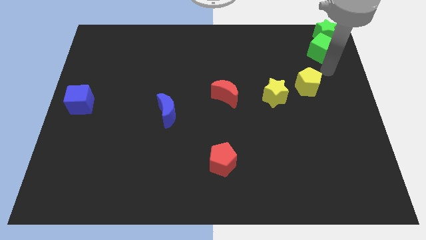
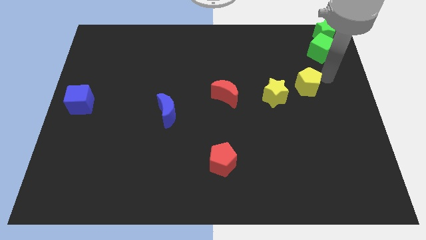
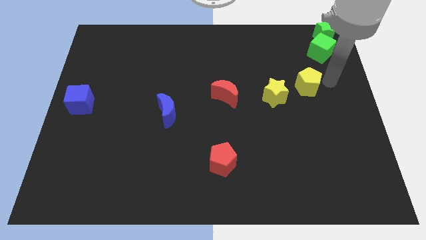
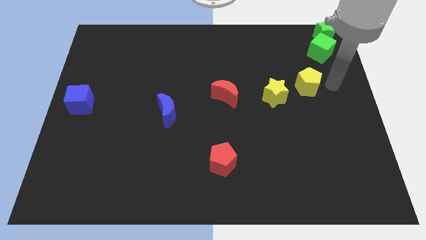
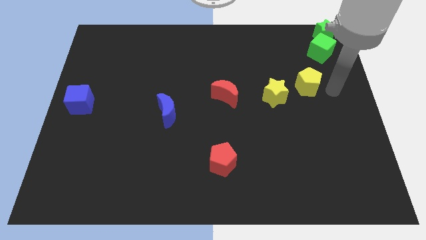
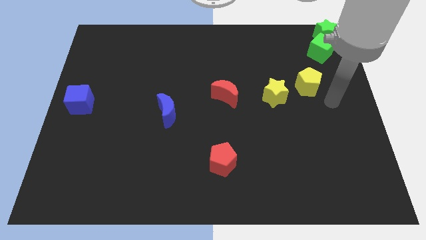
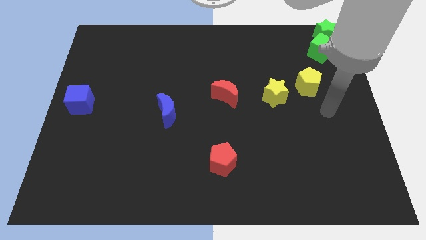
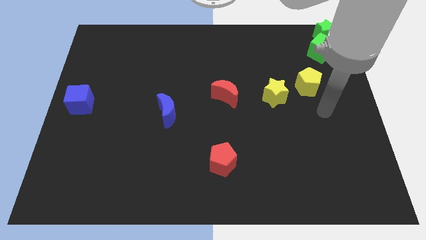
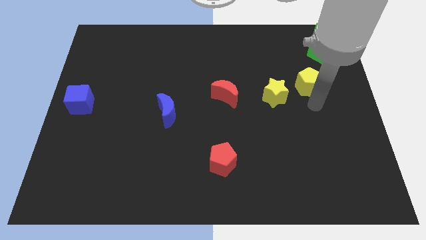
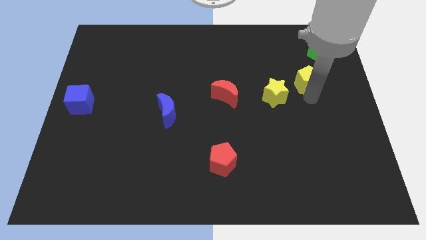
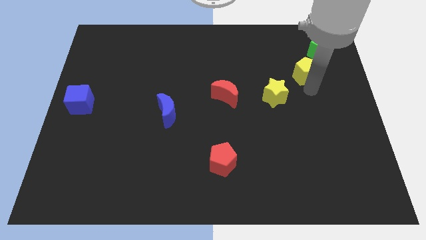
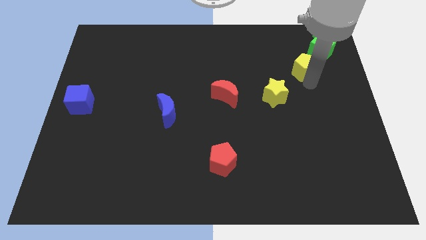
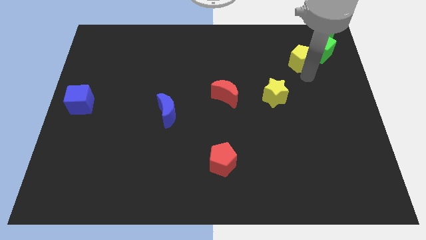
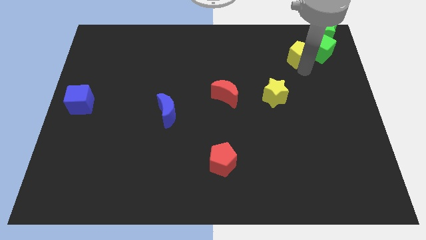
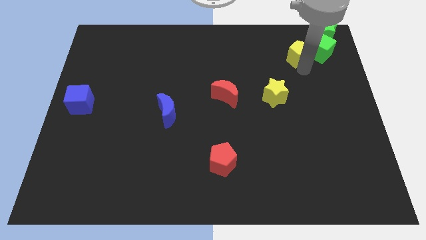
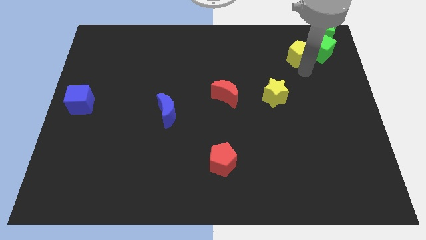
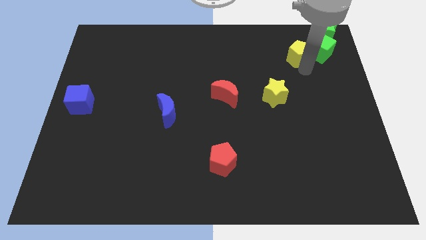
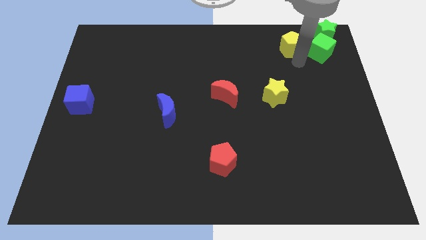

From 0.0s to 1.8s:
put the yellow pentagon left to the green cube

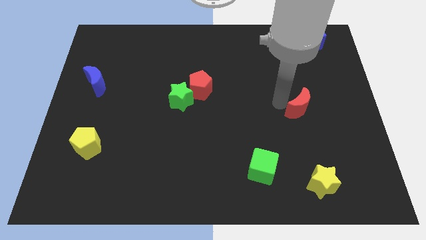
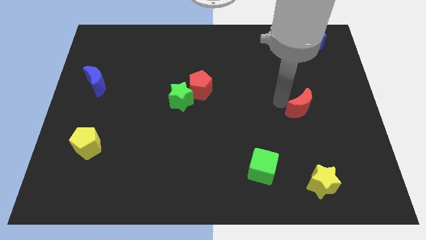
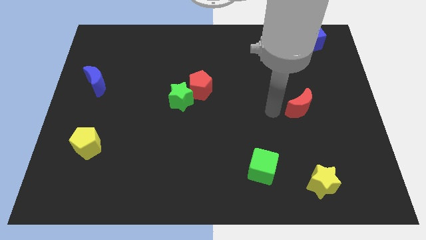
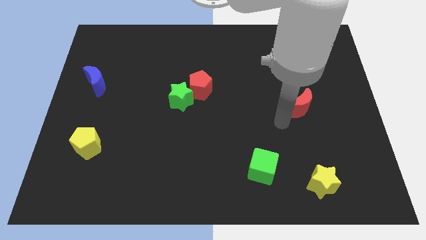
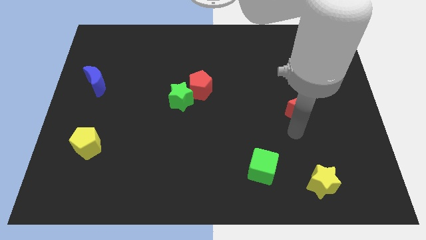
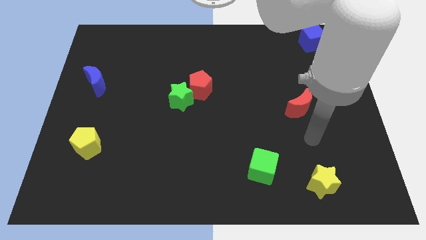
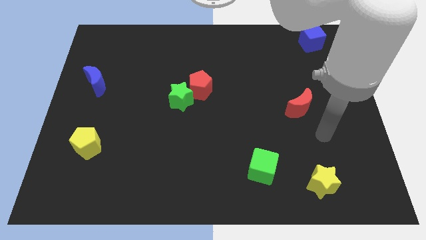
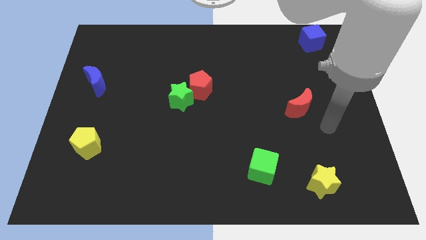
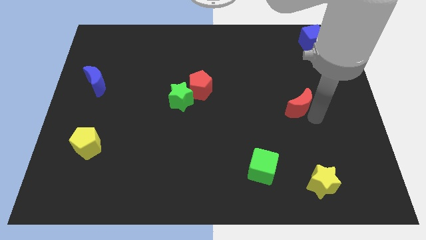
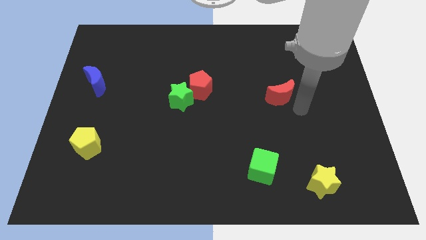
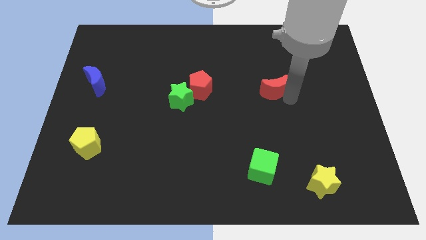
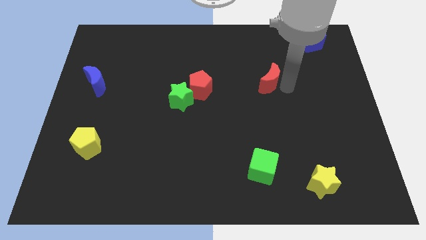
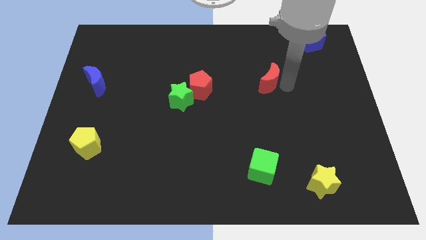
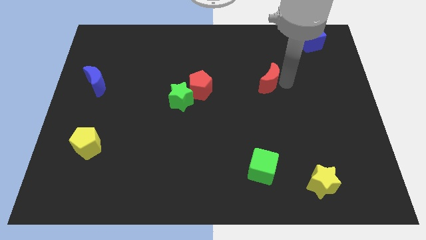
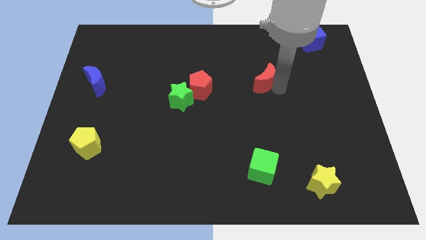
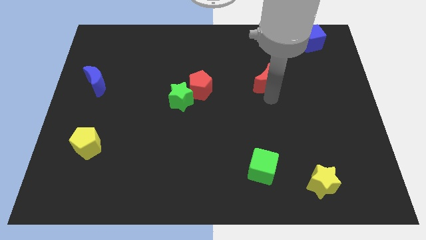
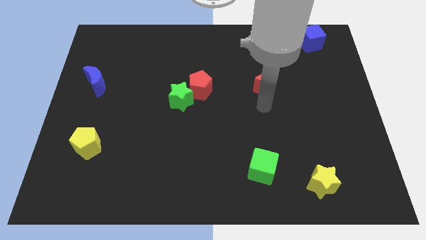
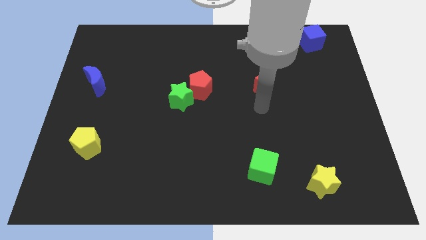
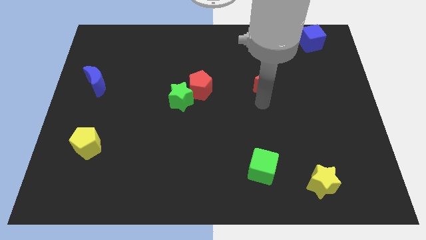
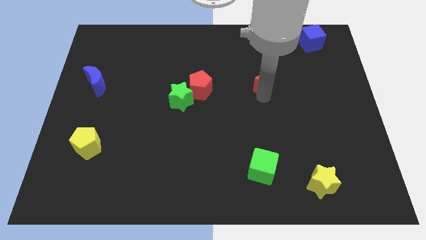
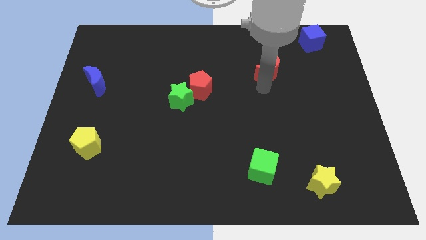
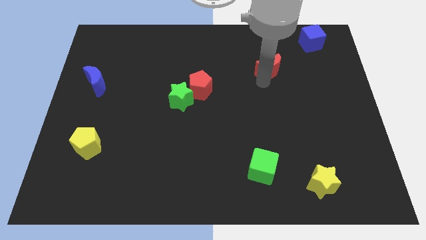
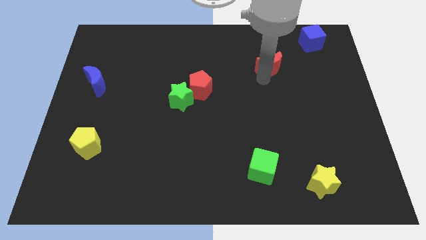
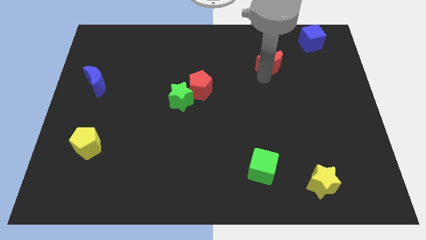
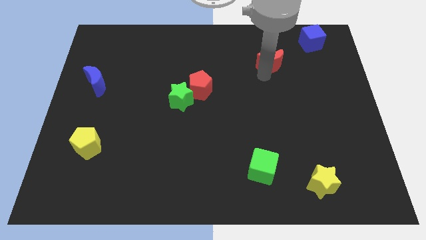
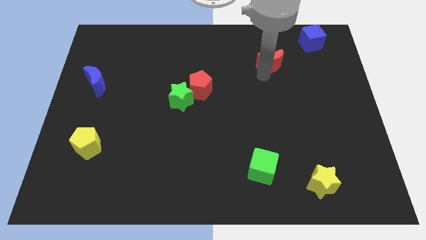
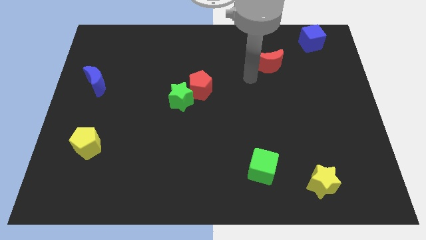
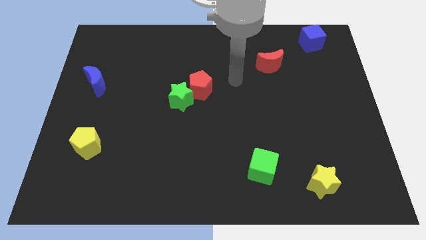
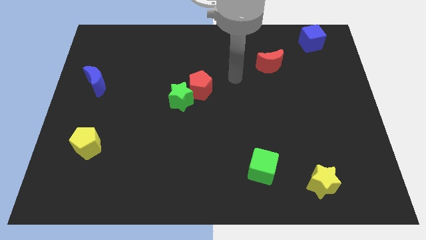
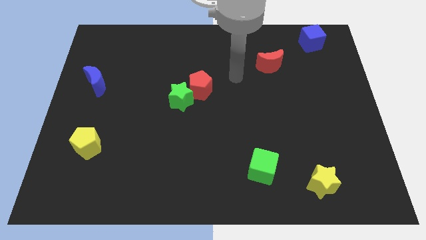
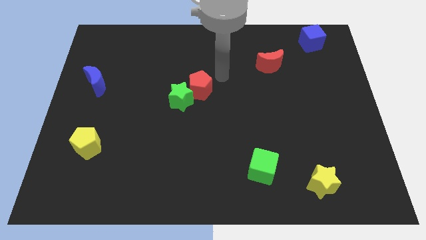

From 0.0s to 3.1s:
place the red moon diagonally in between the red pentagon and the blue cube

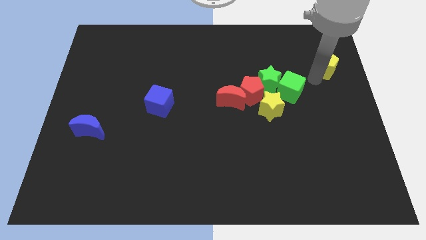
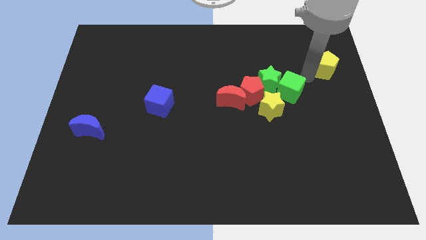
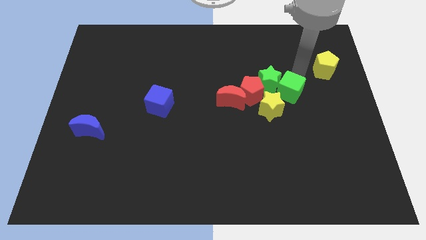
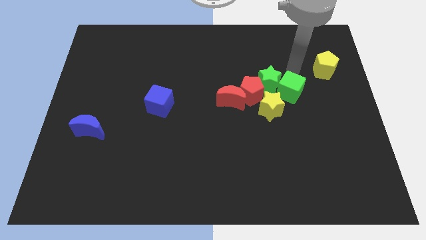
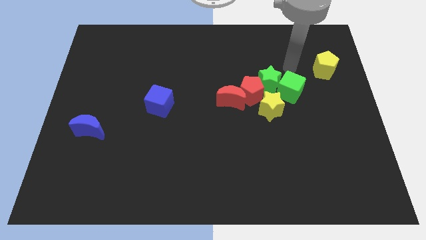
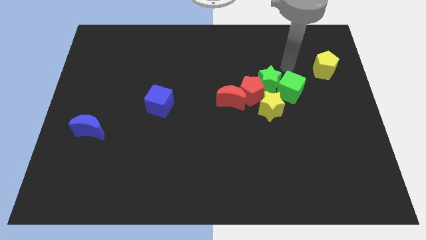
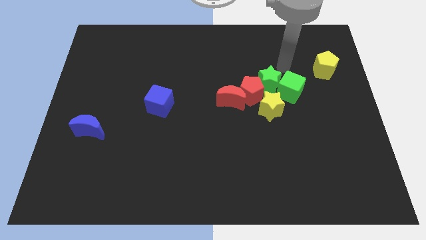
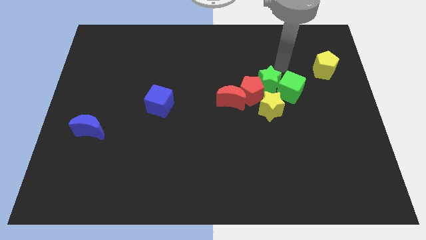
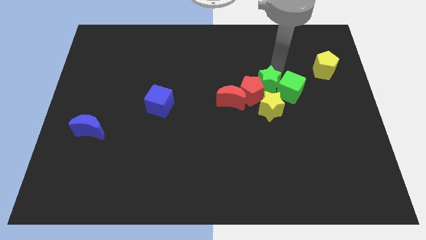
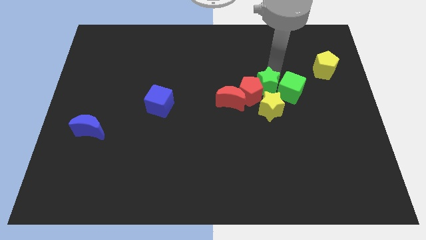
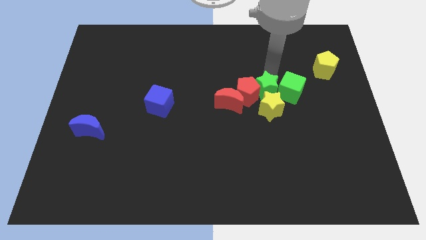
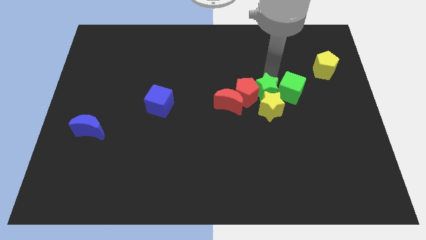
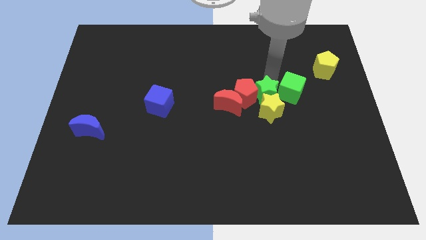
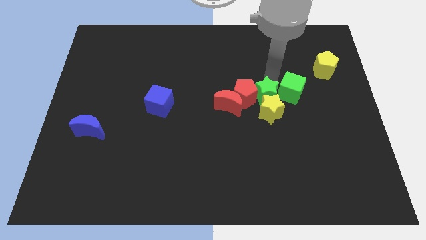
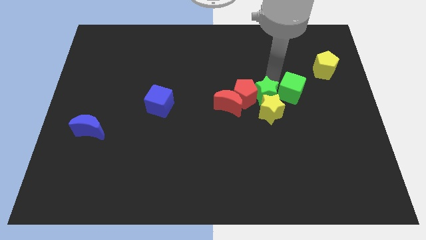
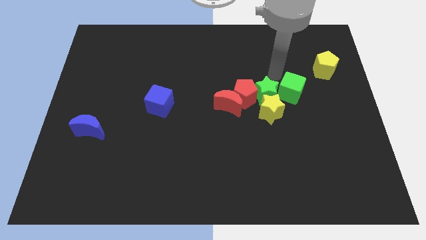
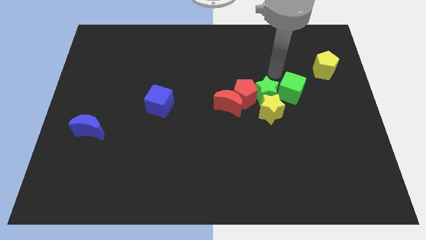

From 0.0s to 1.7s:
push the green star into the top of the yellow star

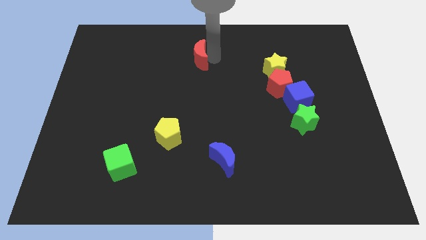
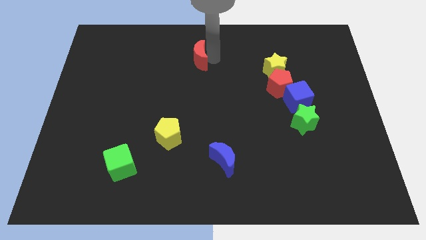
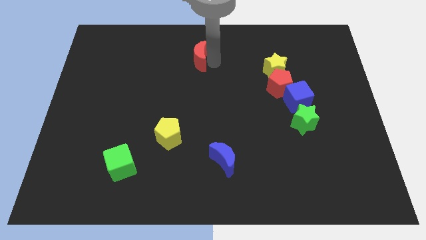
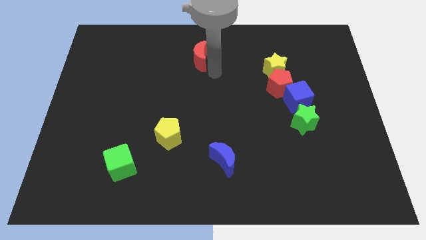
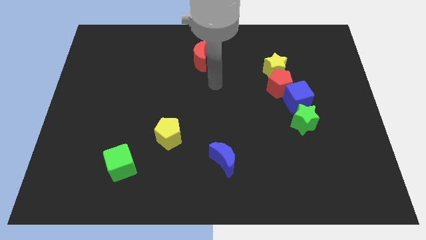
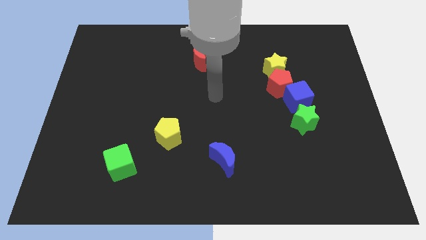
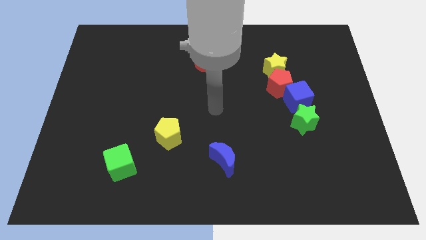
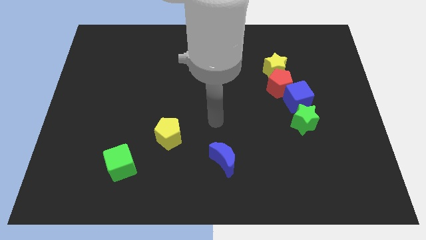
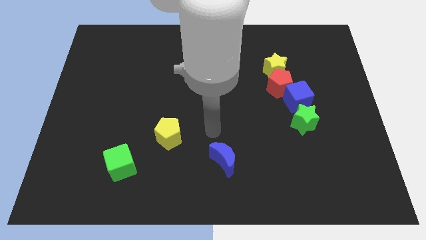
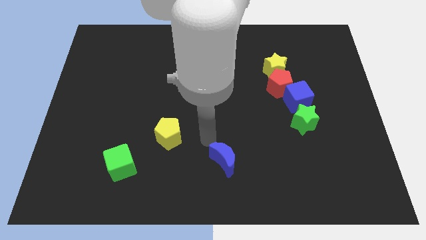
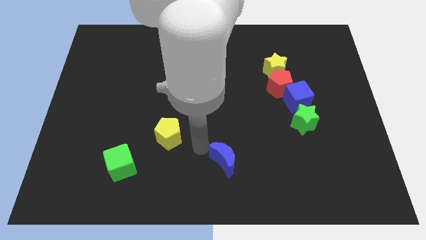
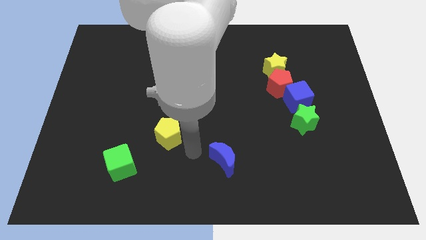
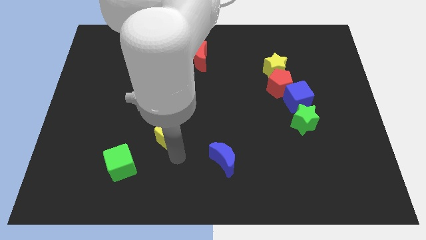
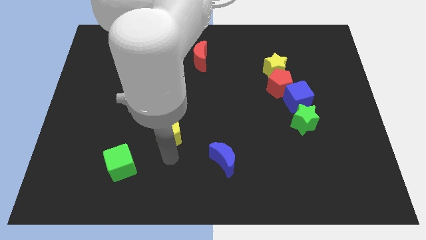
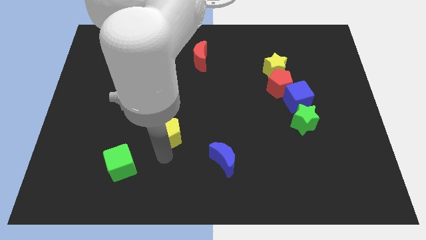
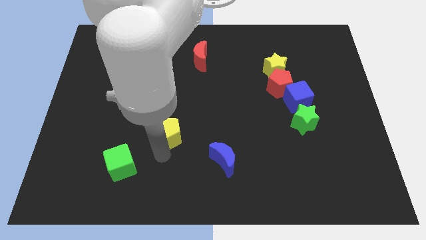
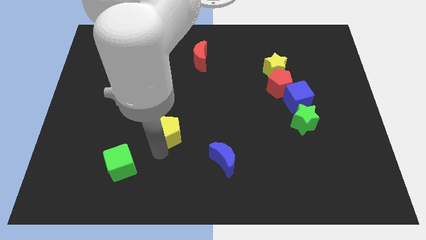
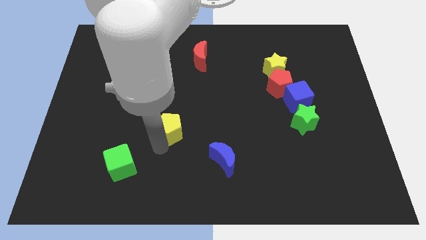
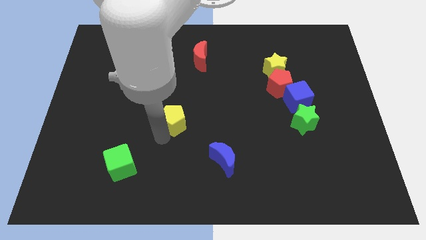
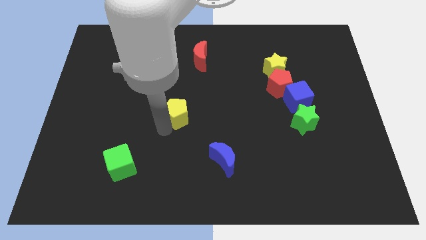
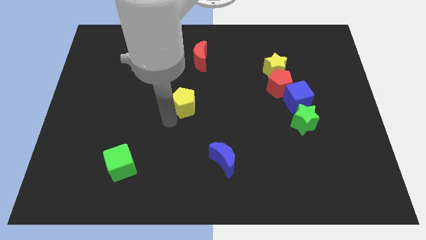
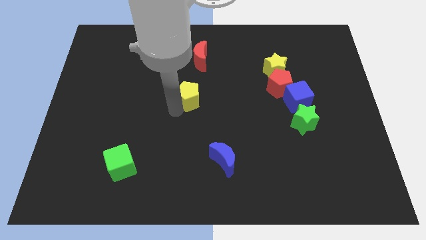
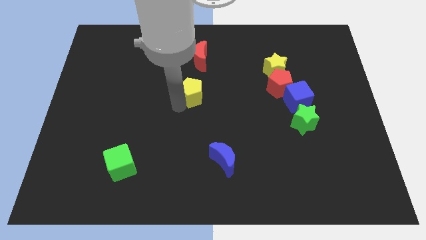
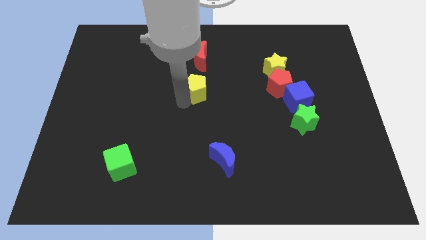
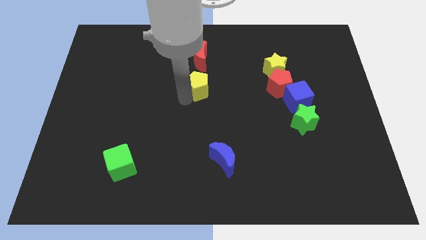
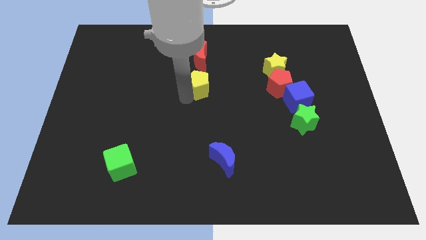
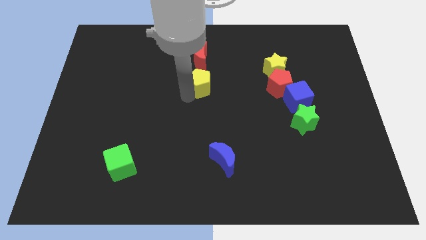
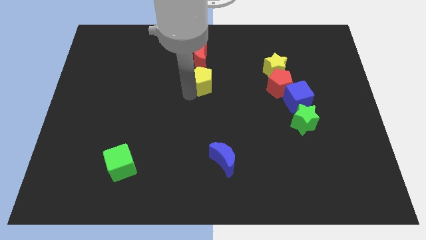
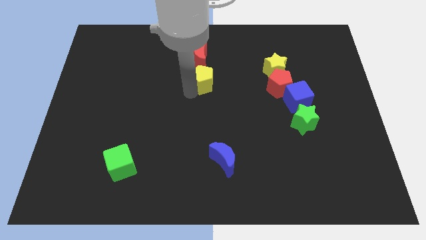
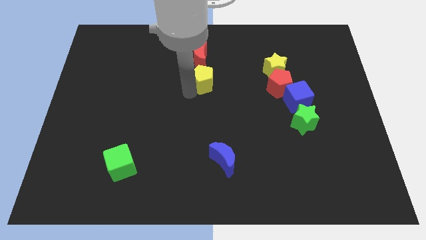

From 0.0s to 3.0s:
place the yellow pentagon down to the red moon
